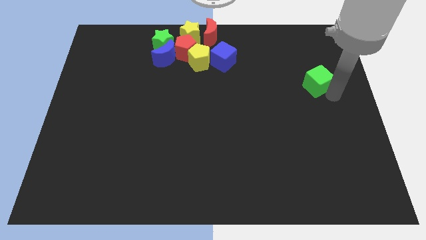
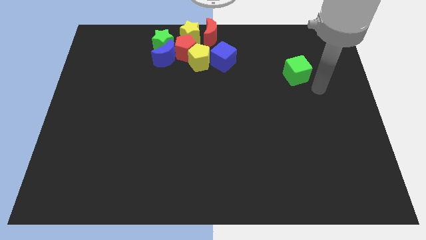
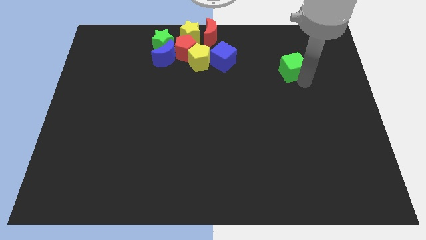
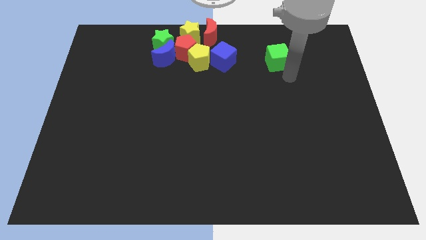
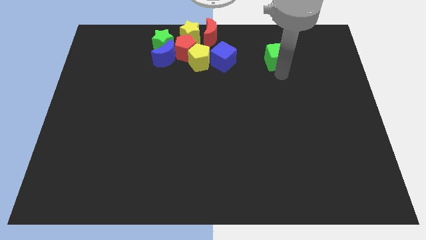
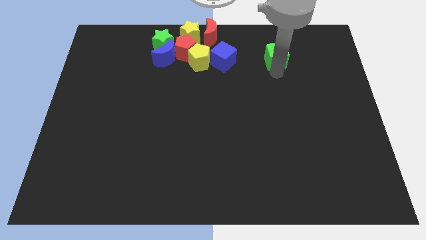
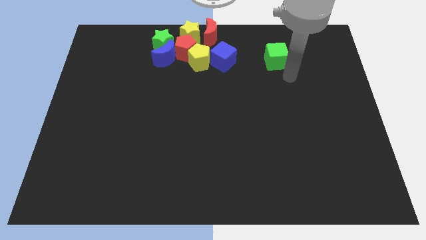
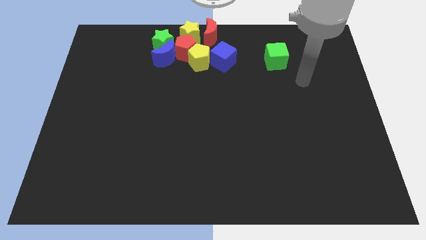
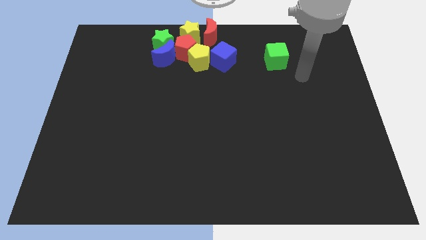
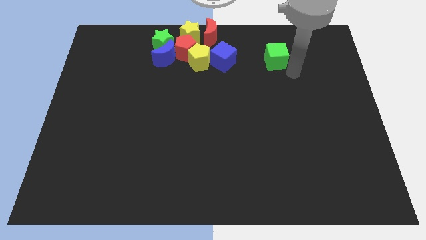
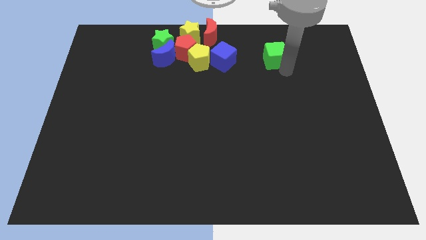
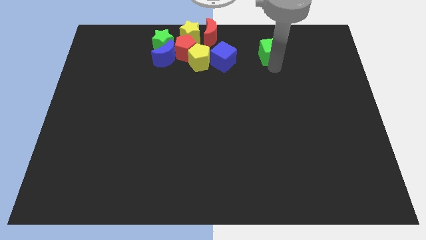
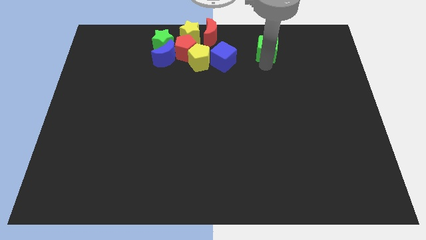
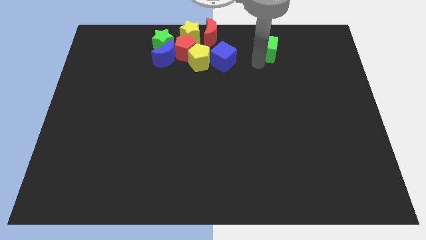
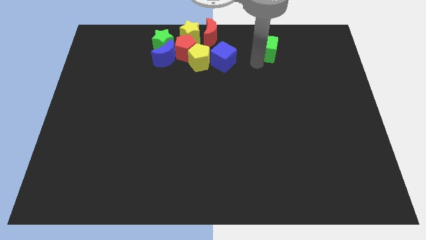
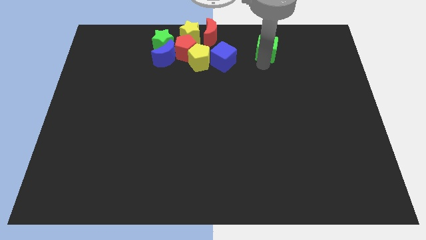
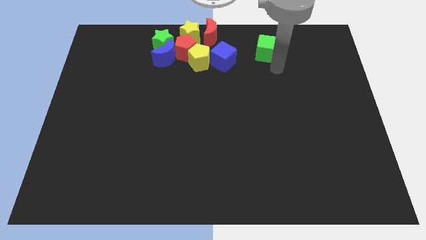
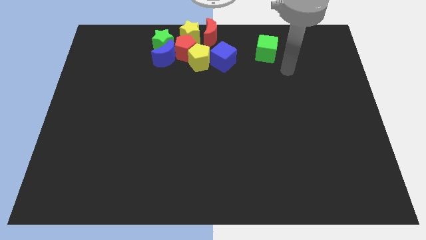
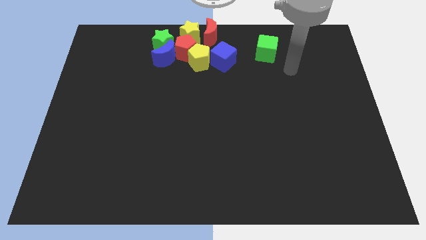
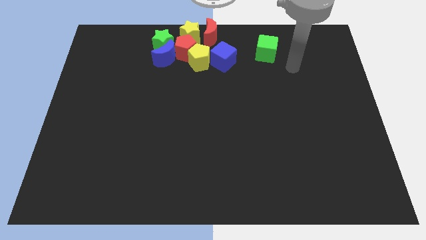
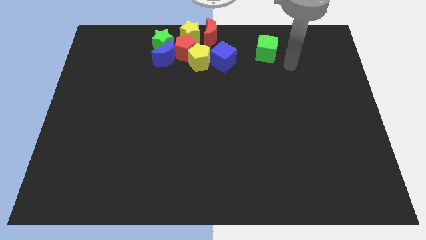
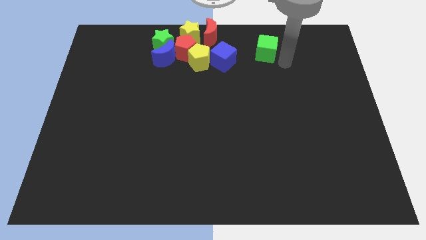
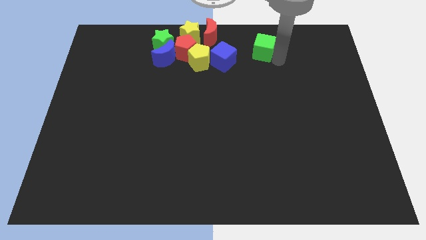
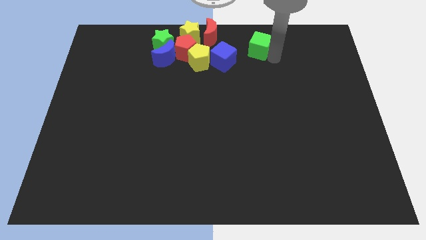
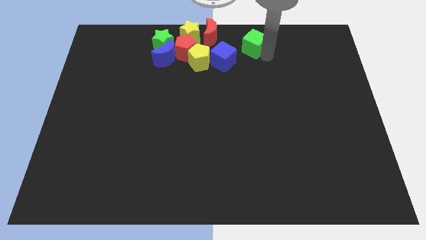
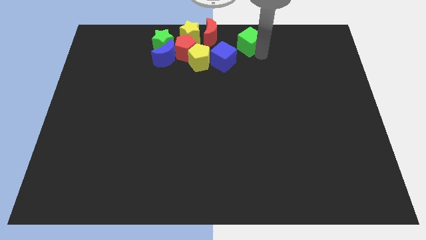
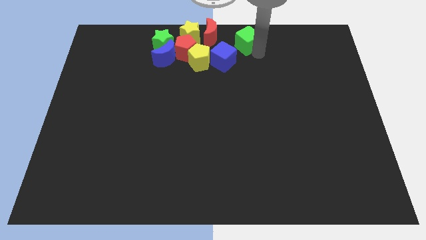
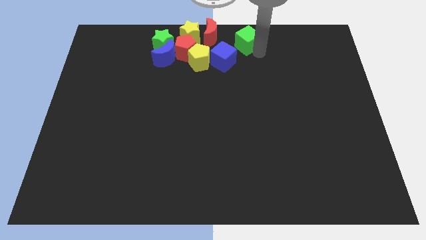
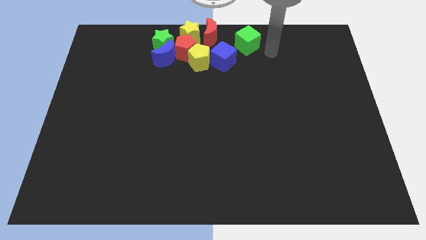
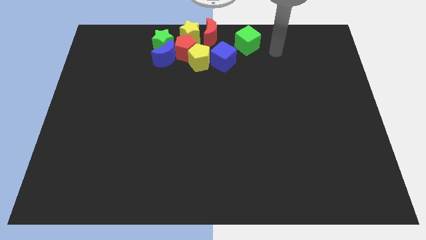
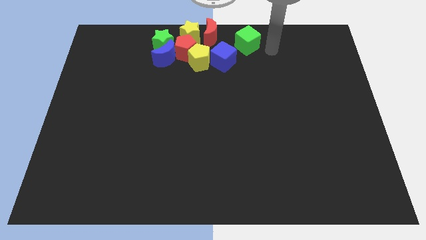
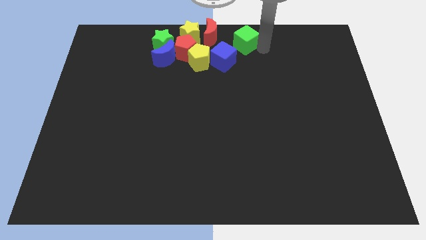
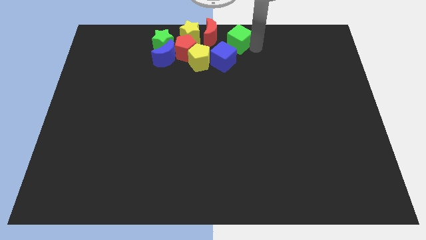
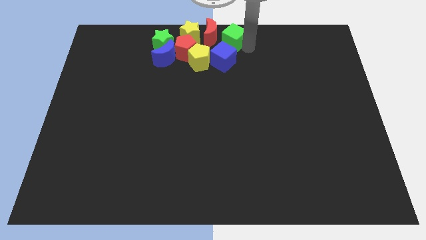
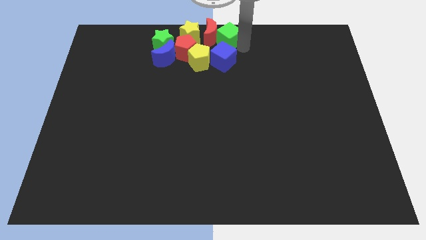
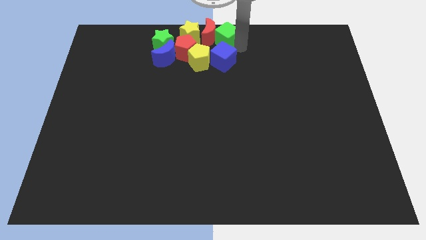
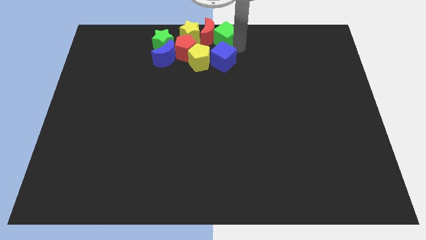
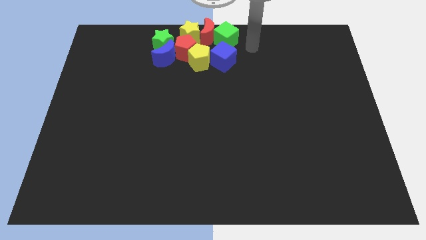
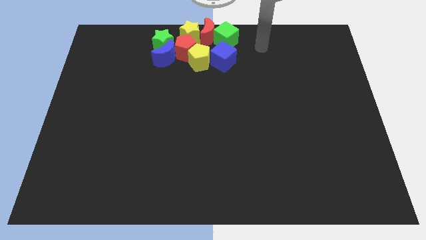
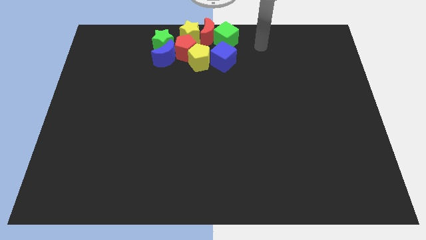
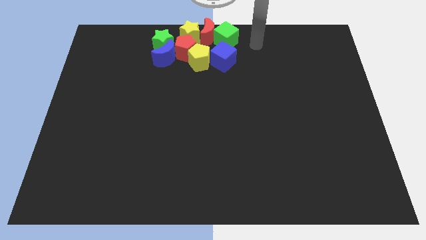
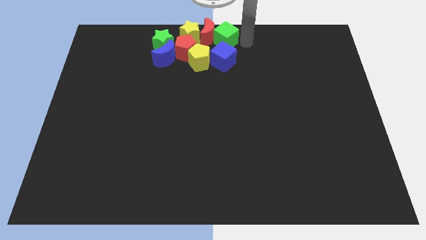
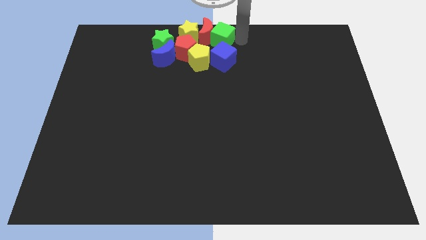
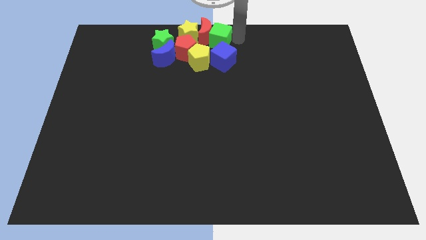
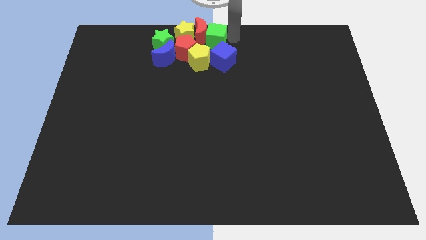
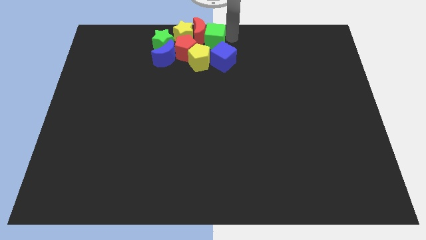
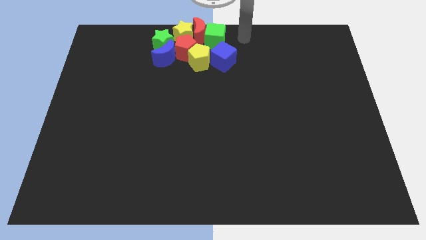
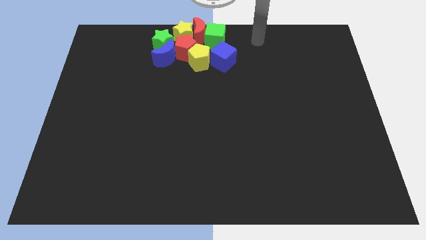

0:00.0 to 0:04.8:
push the green cube into the group of blocks

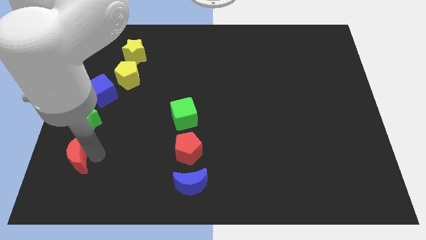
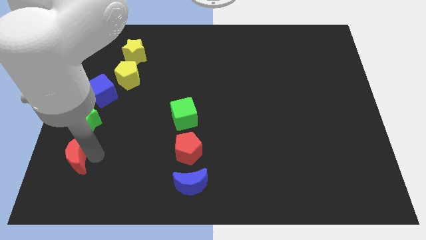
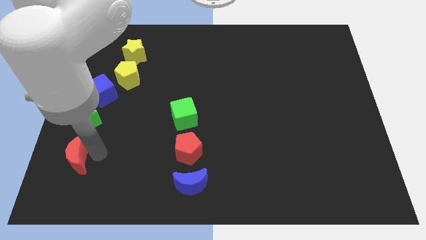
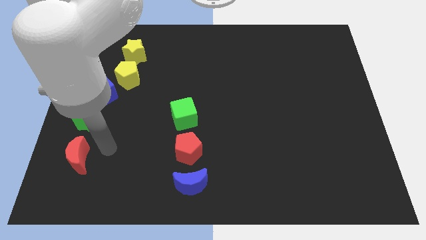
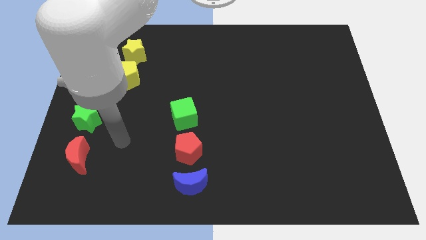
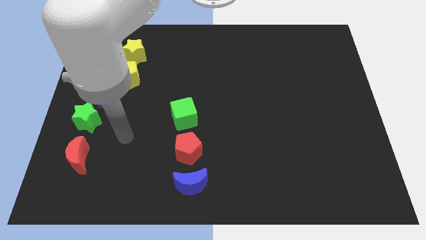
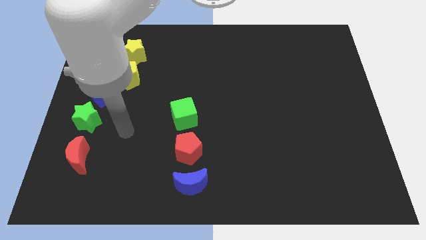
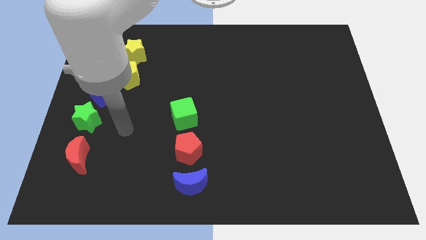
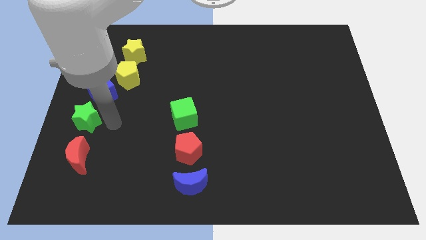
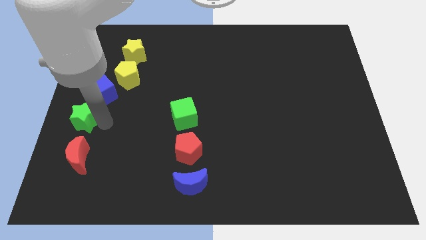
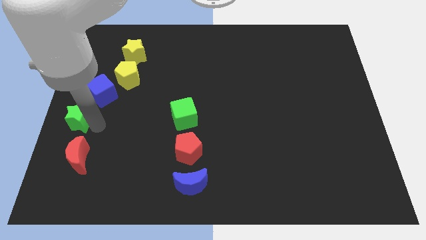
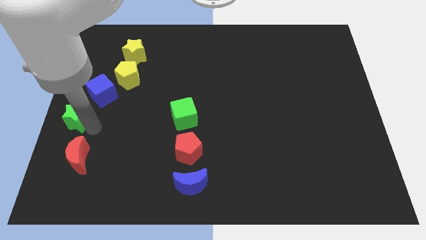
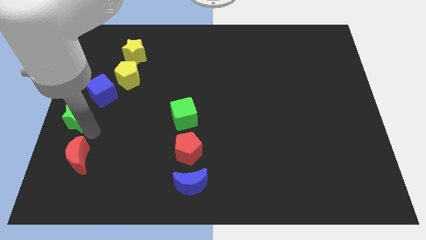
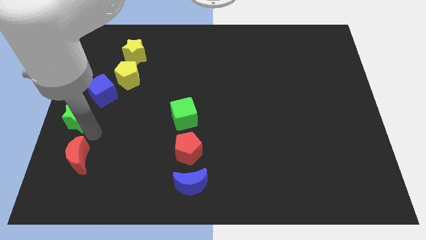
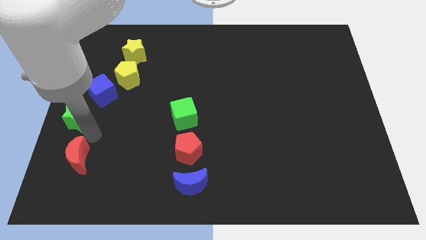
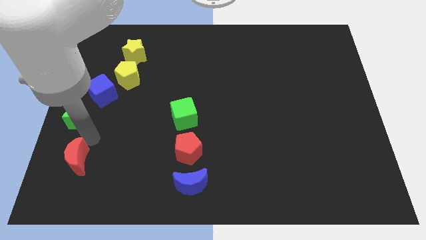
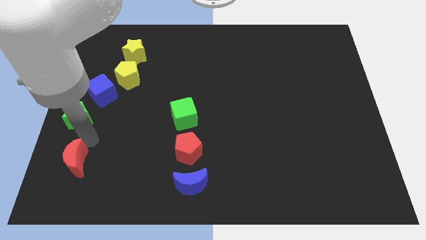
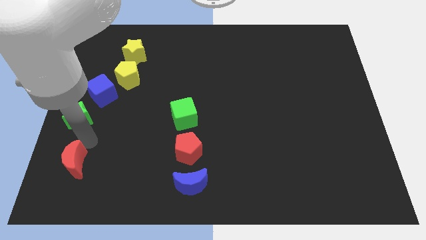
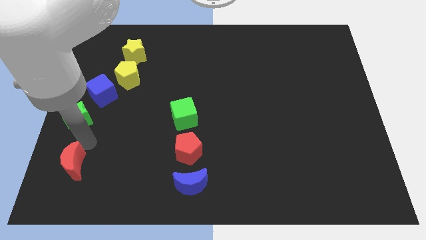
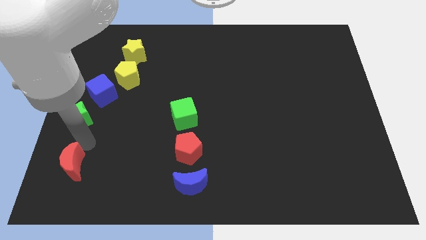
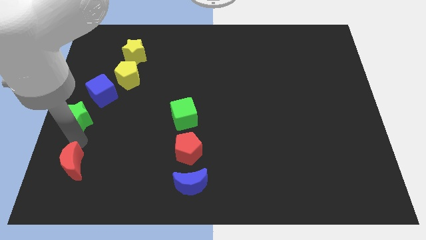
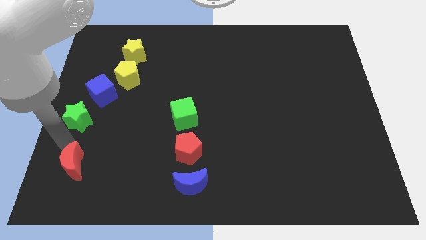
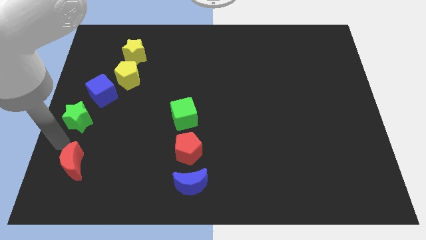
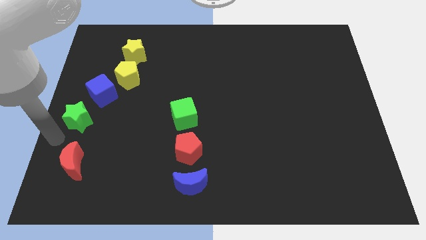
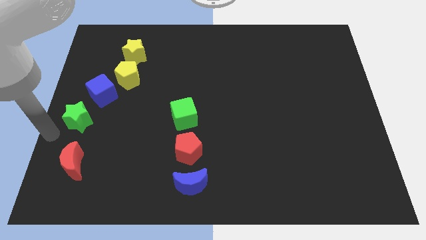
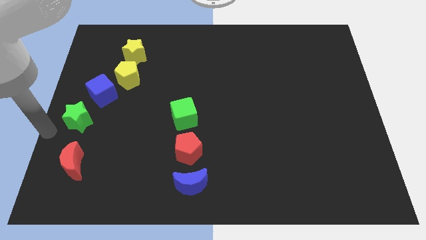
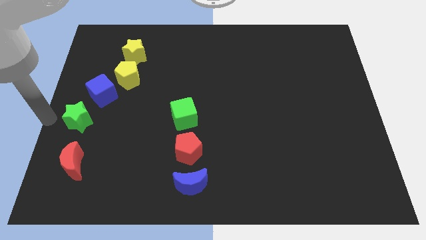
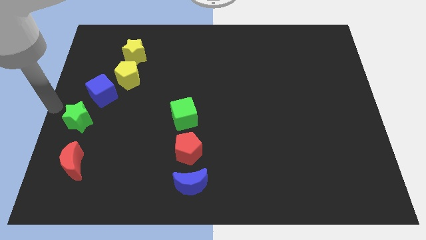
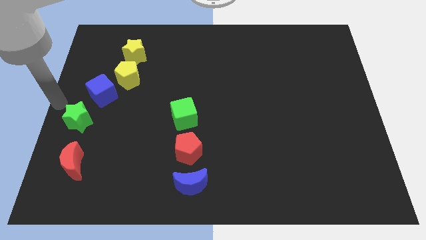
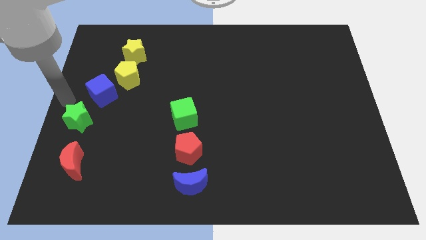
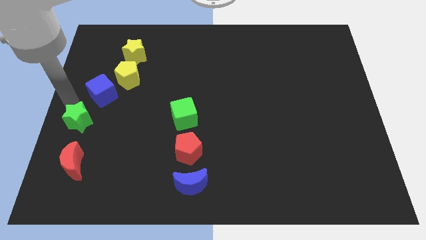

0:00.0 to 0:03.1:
slightly push the green star and red crescent to the left side of the board

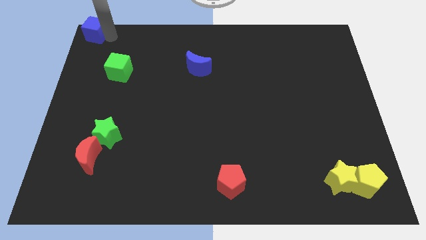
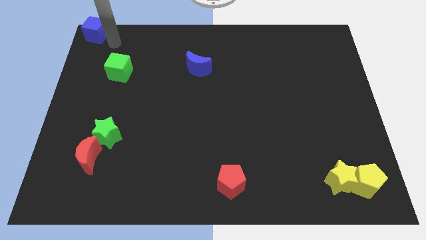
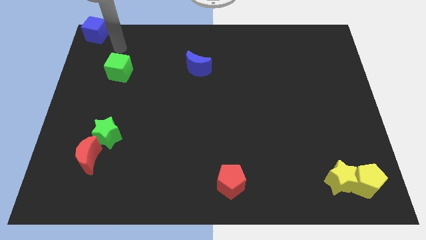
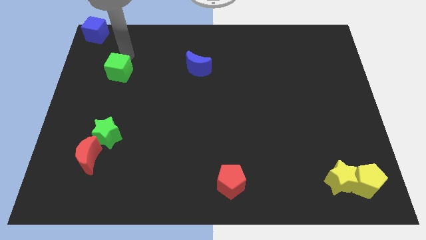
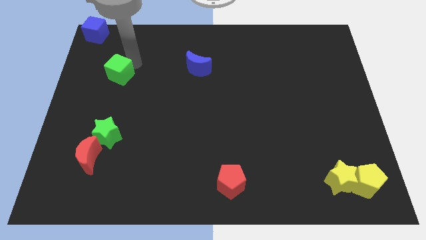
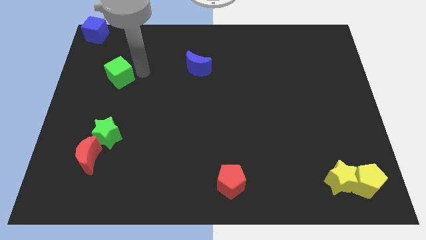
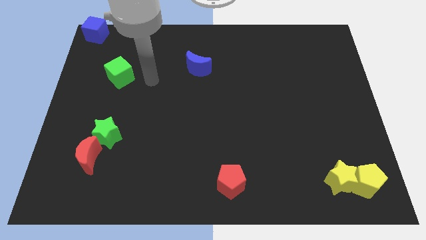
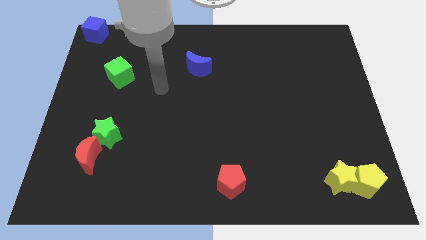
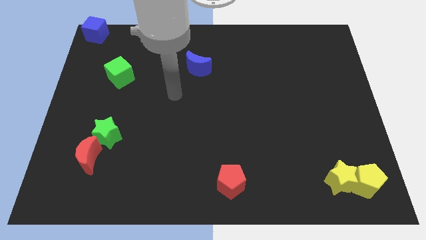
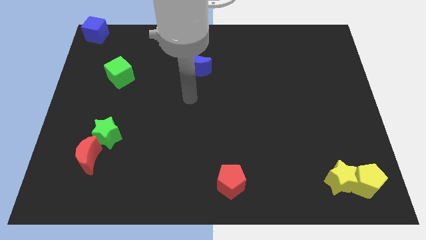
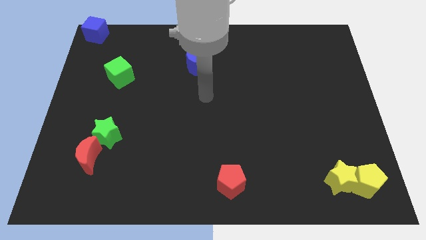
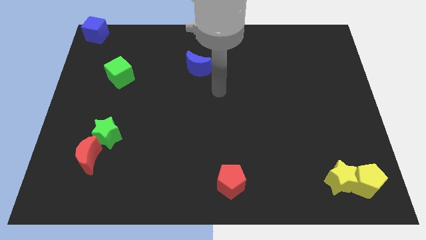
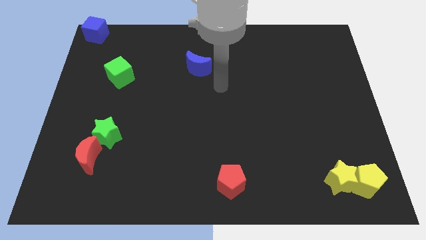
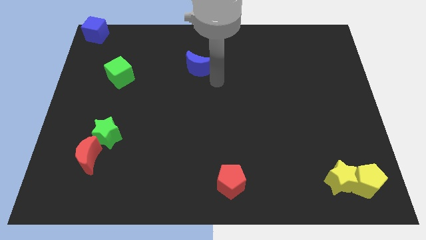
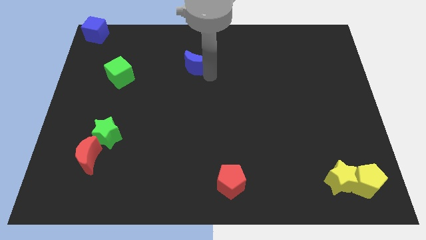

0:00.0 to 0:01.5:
move your arm to the right of blue moon
